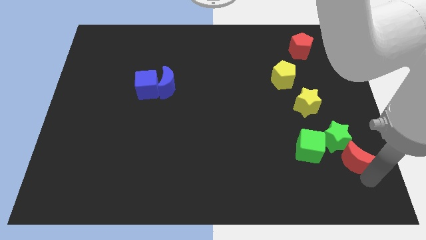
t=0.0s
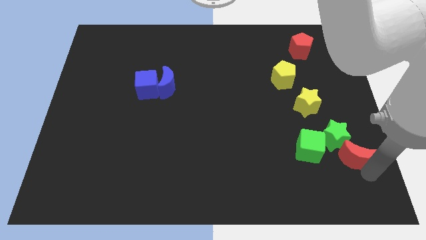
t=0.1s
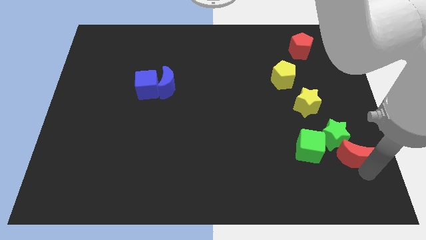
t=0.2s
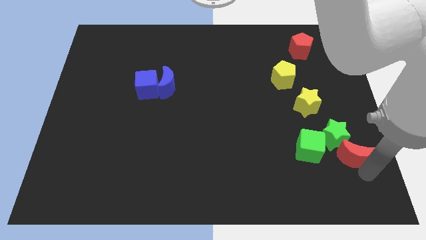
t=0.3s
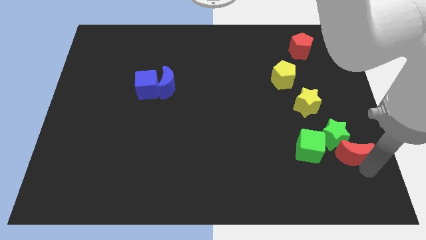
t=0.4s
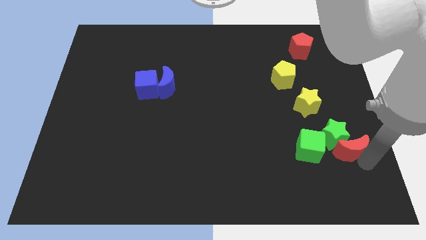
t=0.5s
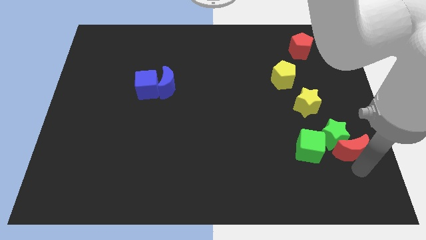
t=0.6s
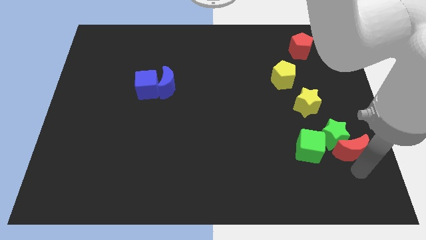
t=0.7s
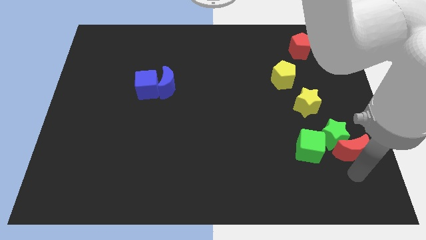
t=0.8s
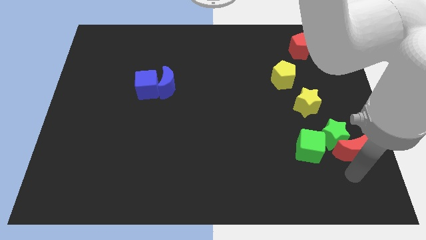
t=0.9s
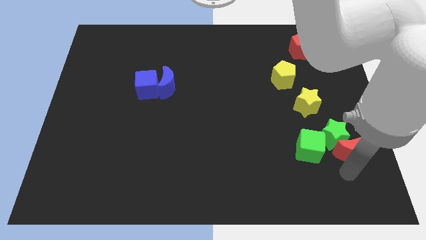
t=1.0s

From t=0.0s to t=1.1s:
push the red crescent into the green star

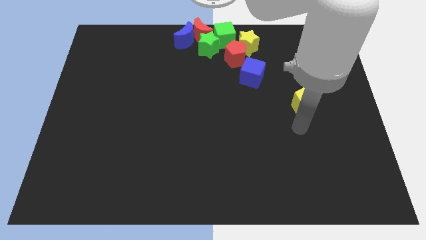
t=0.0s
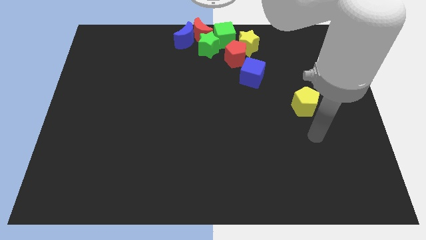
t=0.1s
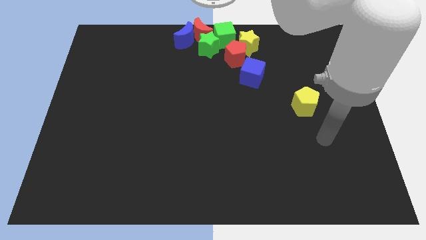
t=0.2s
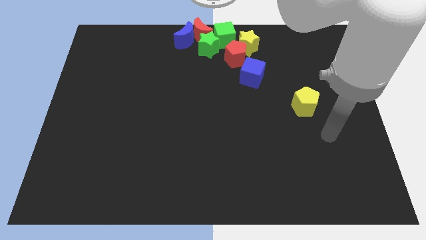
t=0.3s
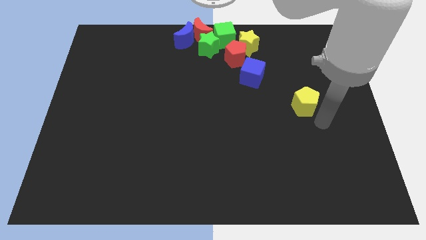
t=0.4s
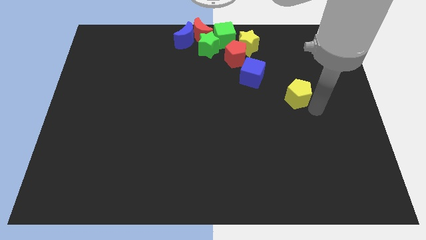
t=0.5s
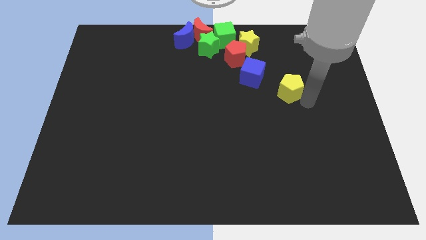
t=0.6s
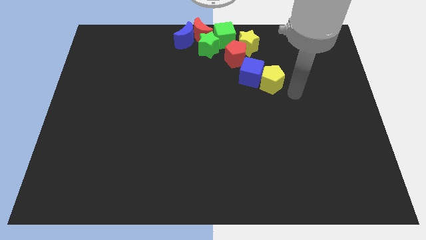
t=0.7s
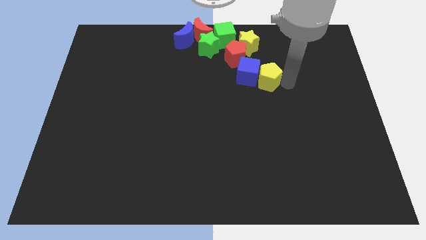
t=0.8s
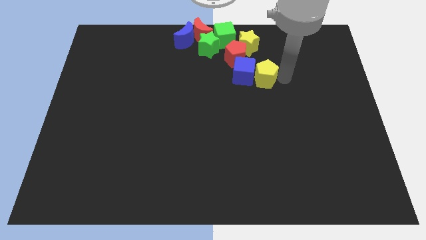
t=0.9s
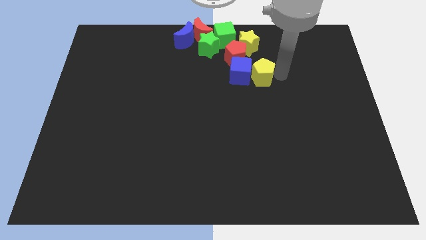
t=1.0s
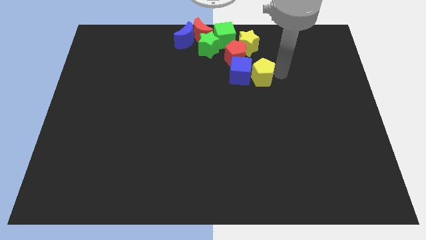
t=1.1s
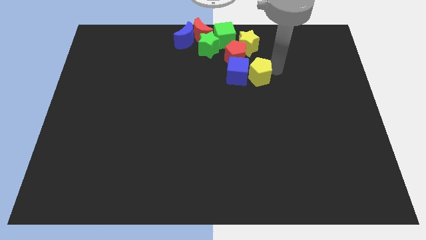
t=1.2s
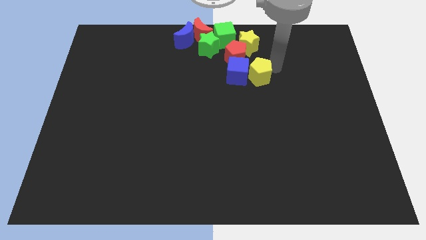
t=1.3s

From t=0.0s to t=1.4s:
move the yellow pentagon to the blue cube

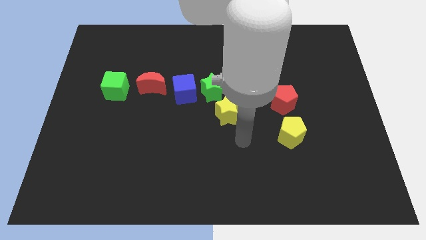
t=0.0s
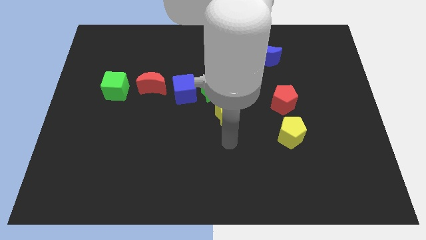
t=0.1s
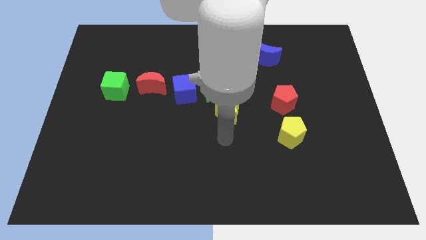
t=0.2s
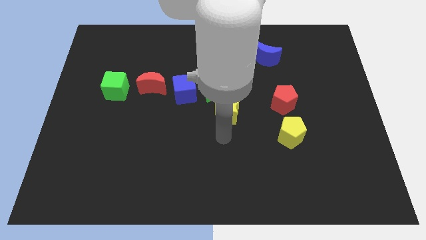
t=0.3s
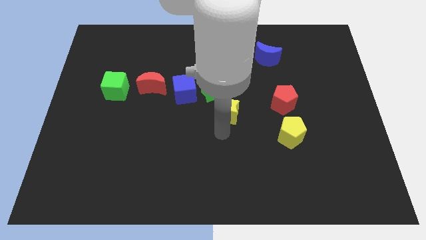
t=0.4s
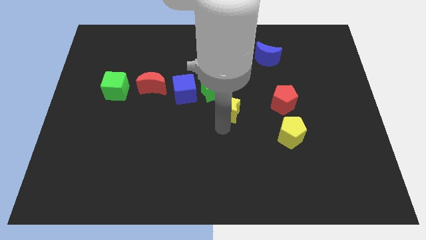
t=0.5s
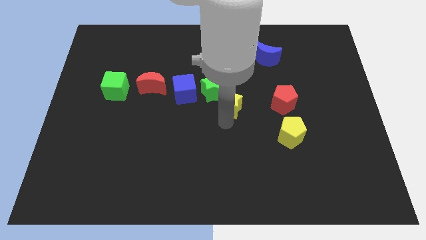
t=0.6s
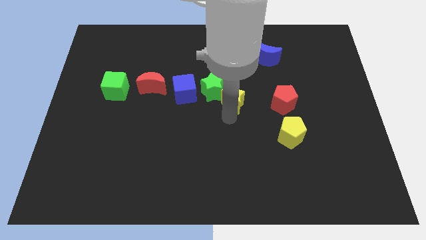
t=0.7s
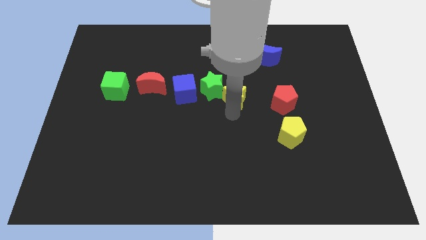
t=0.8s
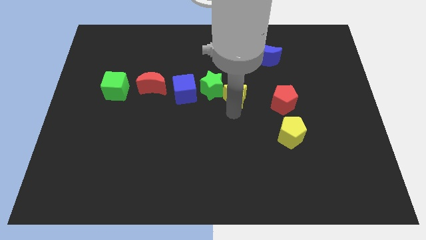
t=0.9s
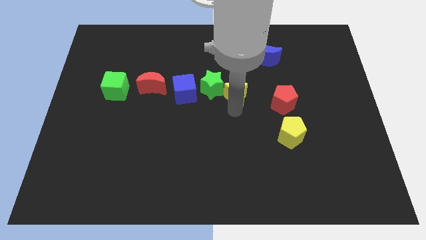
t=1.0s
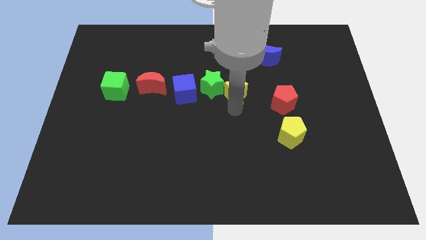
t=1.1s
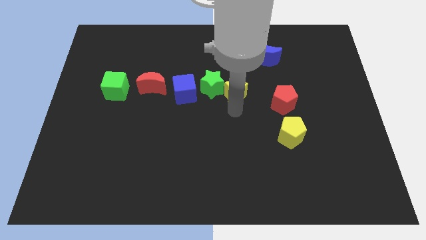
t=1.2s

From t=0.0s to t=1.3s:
push yellow star upwards

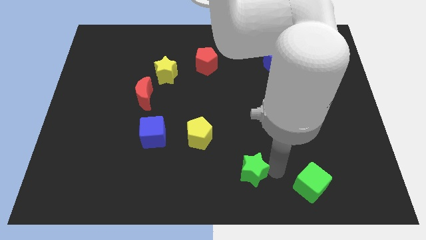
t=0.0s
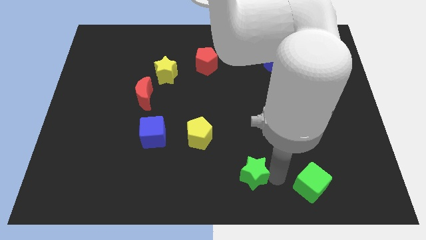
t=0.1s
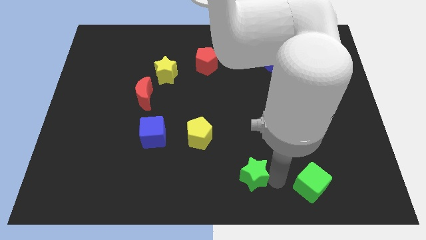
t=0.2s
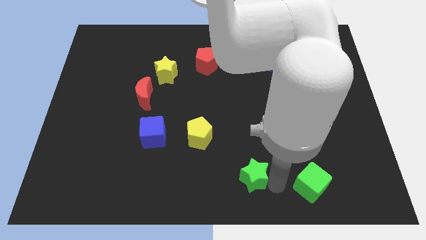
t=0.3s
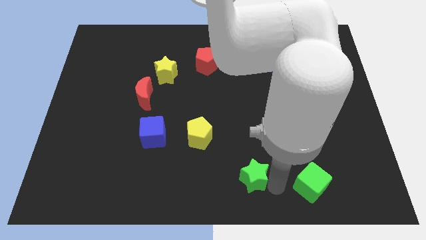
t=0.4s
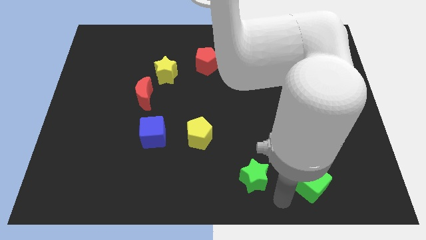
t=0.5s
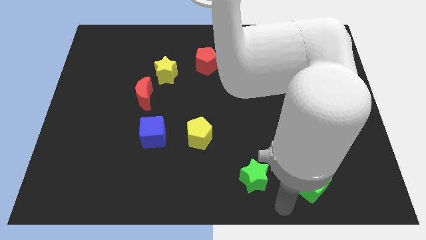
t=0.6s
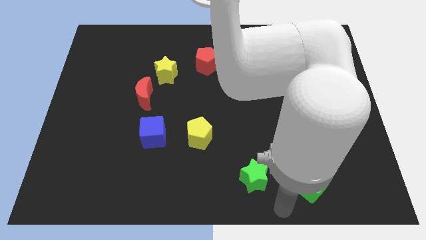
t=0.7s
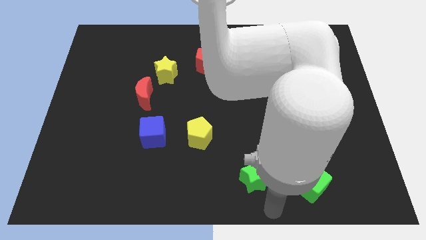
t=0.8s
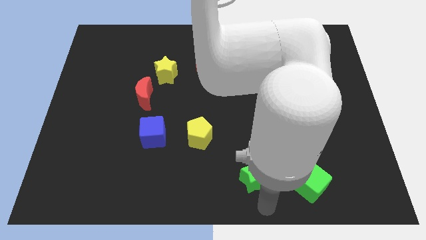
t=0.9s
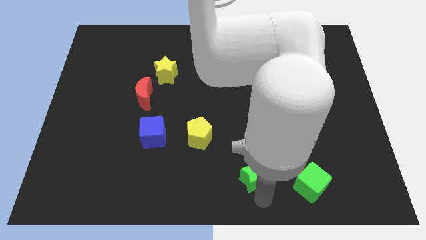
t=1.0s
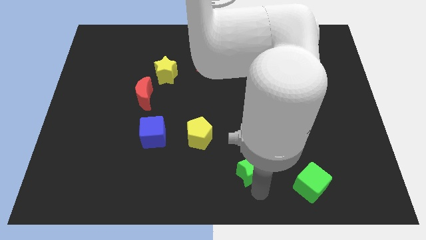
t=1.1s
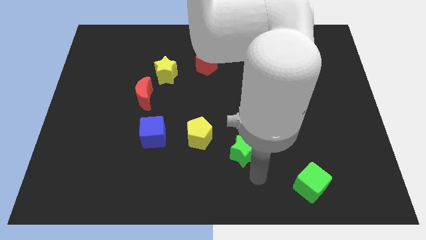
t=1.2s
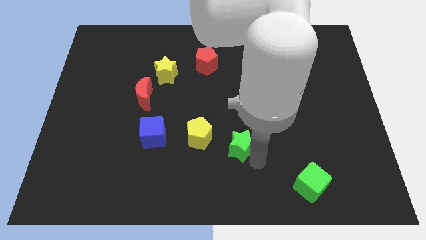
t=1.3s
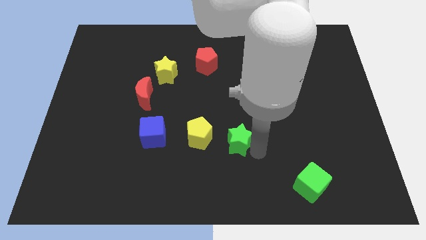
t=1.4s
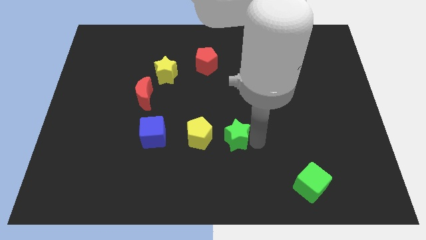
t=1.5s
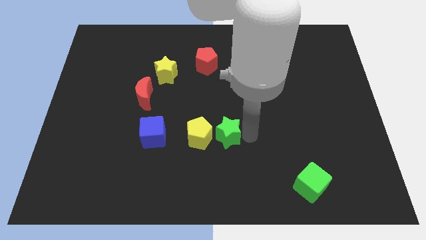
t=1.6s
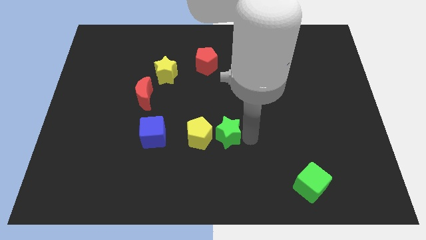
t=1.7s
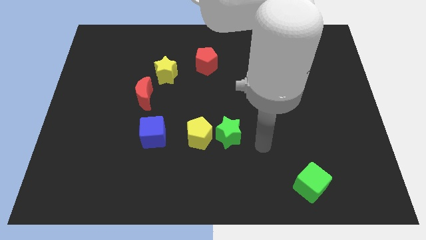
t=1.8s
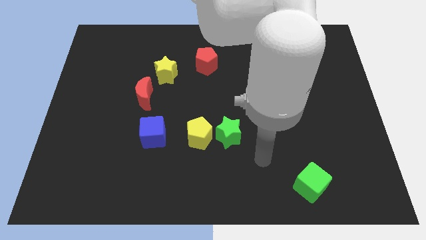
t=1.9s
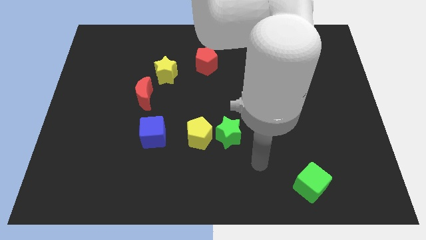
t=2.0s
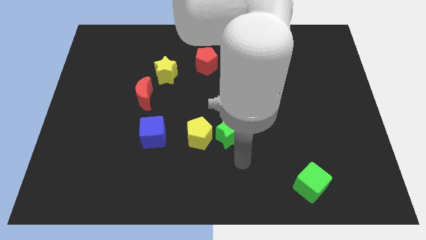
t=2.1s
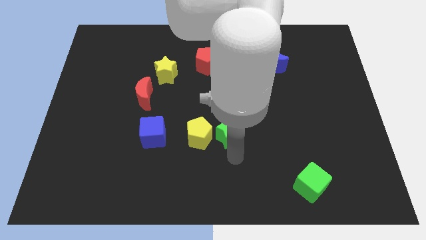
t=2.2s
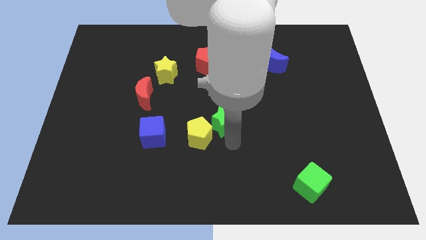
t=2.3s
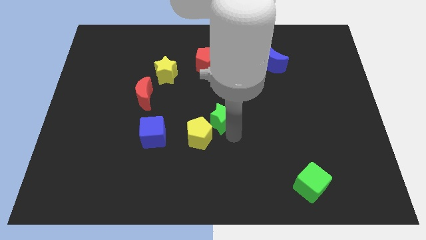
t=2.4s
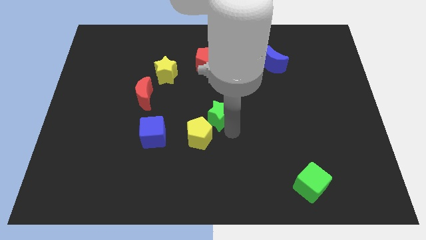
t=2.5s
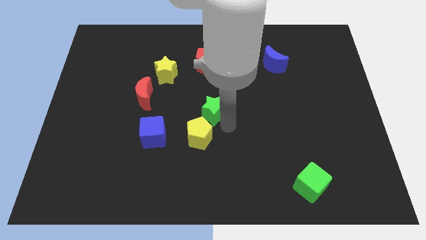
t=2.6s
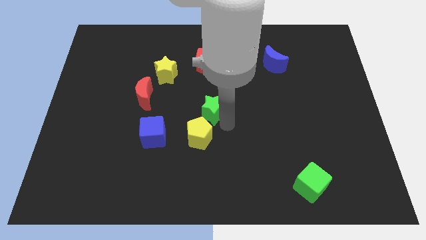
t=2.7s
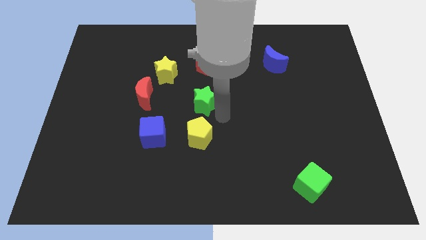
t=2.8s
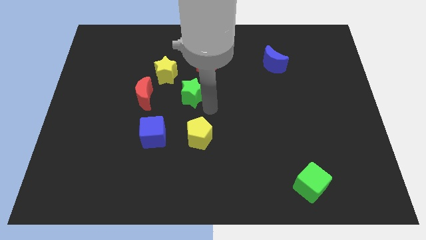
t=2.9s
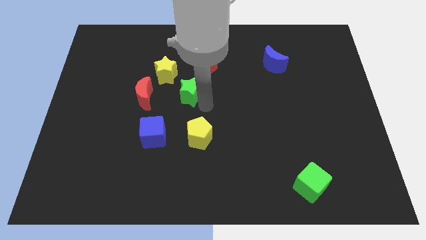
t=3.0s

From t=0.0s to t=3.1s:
move the green star above the yellow pentagon

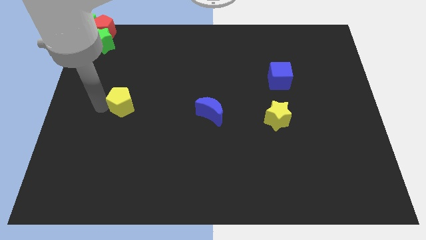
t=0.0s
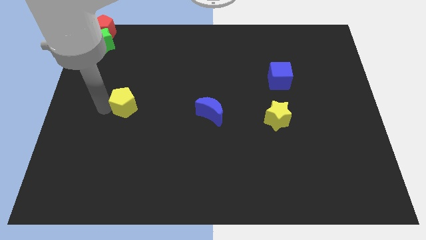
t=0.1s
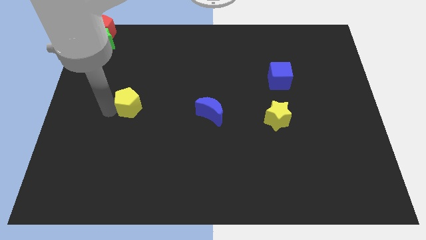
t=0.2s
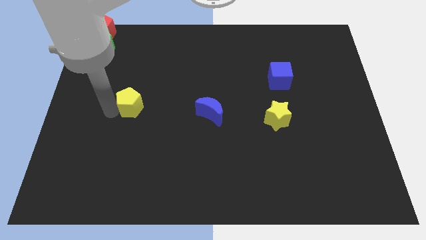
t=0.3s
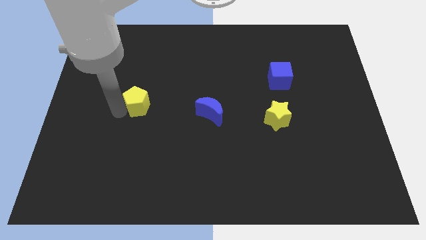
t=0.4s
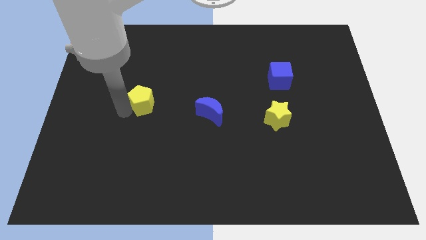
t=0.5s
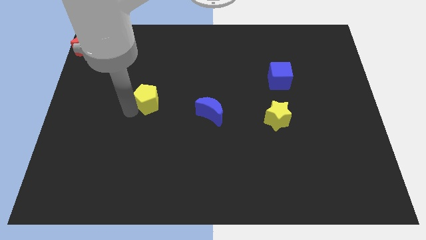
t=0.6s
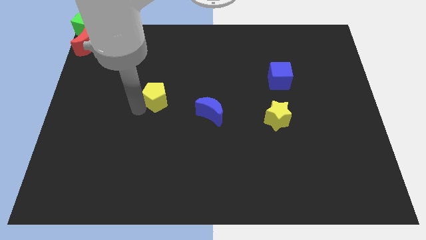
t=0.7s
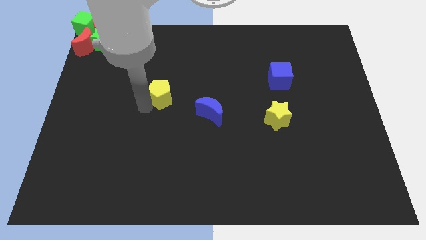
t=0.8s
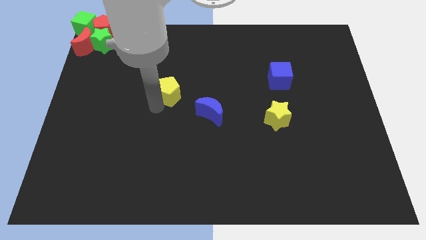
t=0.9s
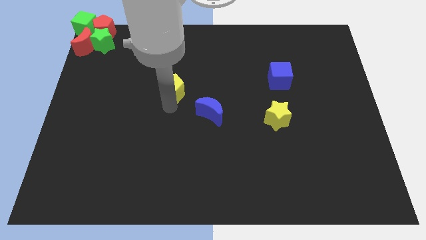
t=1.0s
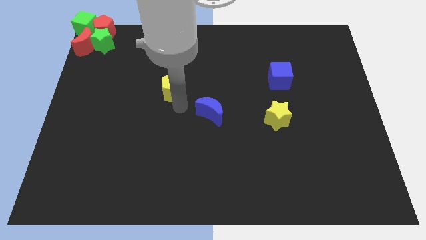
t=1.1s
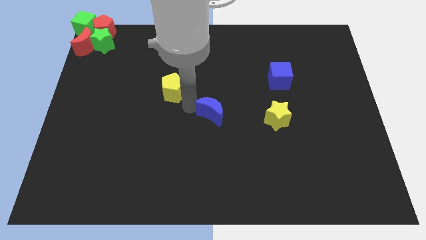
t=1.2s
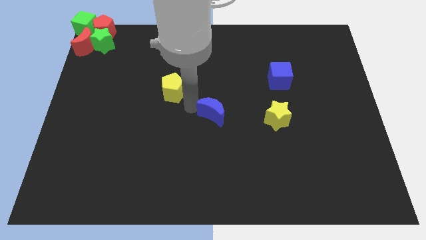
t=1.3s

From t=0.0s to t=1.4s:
push the yellow pentagon to the center

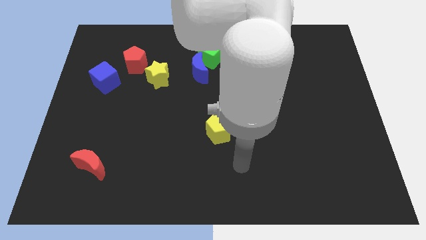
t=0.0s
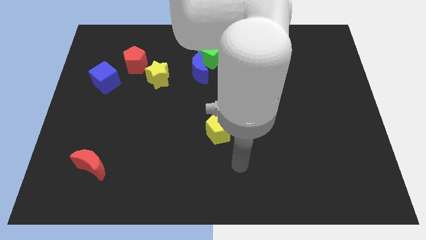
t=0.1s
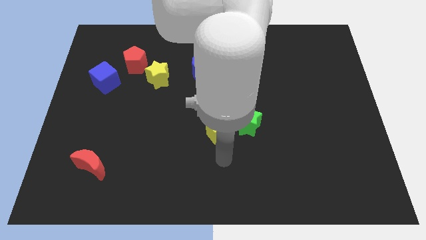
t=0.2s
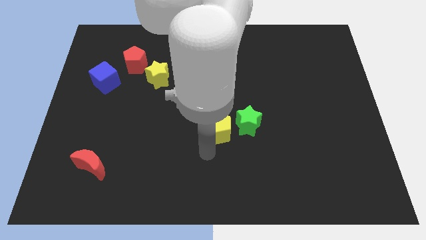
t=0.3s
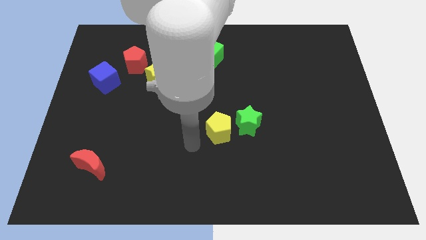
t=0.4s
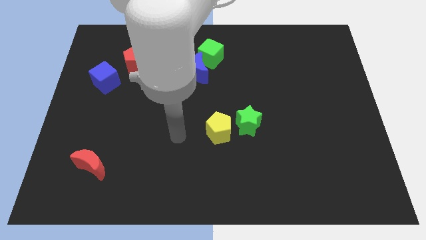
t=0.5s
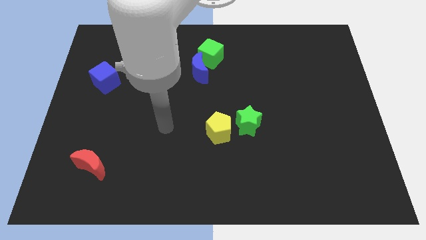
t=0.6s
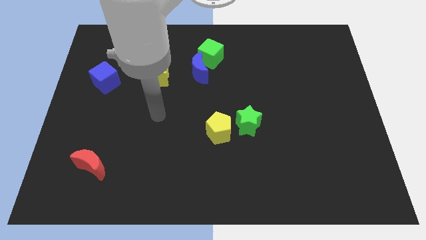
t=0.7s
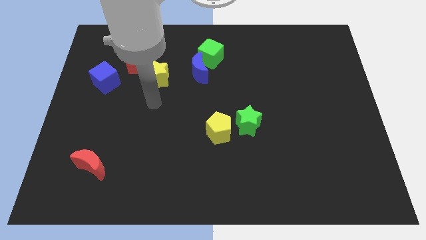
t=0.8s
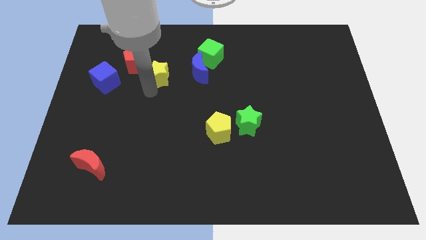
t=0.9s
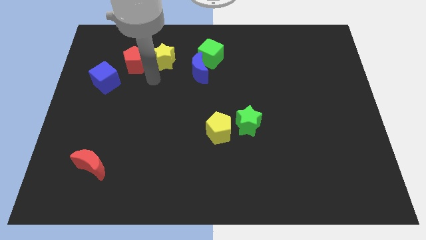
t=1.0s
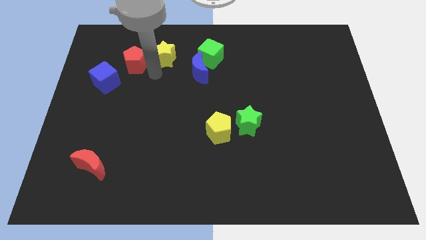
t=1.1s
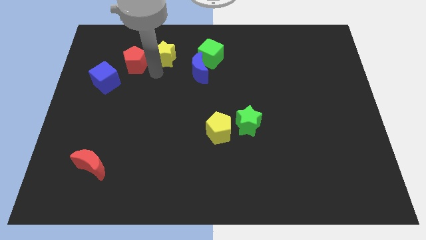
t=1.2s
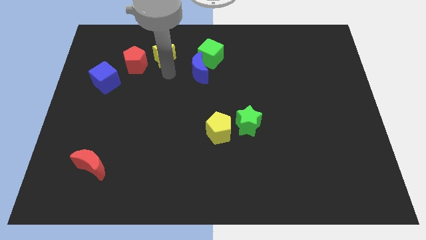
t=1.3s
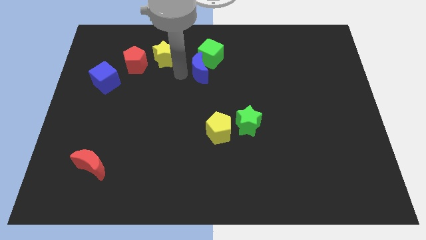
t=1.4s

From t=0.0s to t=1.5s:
push the yellow star parallel left to the green cube
